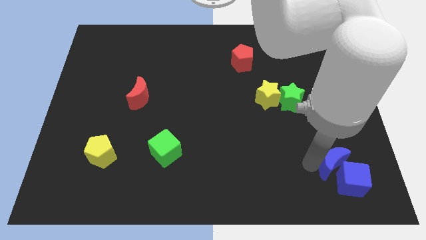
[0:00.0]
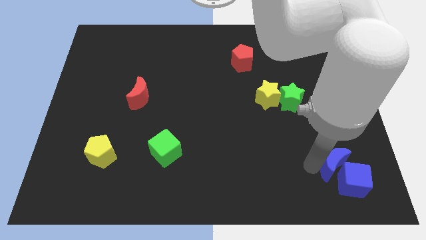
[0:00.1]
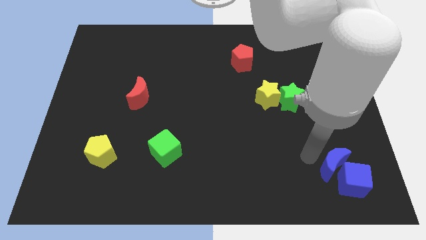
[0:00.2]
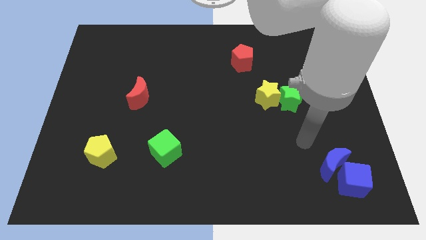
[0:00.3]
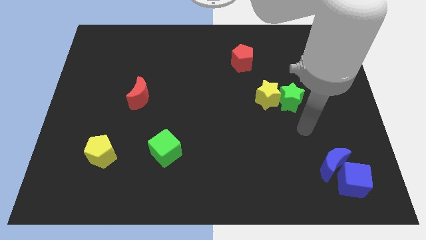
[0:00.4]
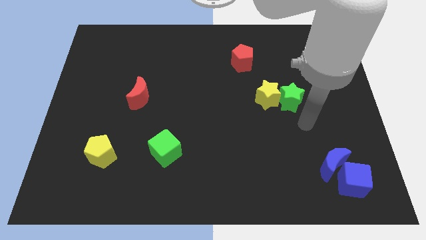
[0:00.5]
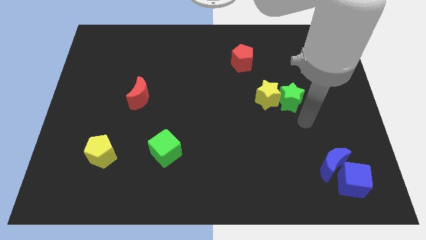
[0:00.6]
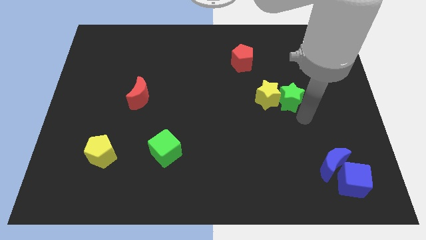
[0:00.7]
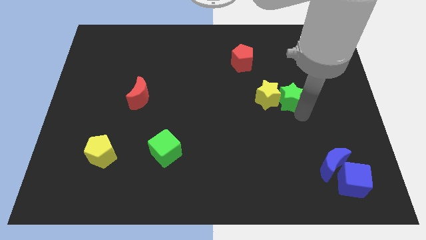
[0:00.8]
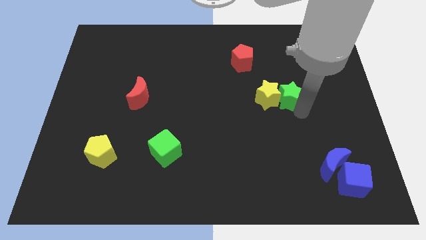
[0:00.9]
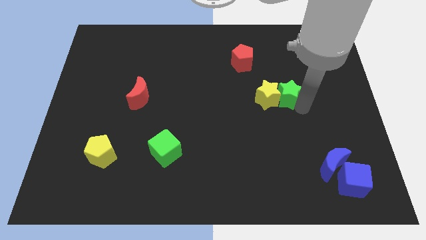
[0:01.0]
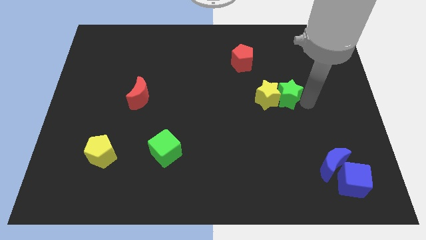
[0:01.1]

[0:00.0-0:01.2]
touch at the bottom right side of the green star

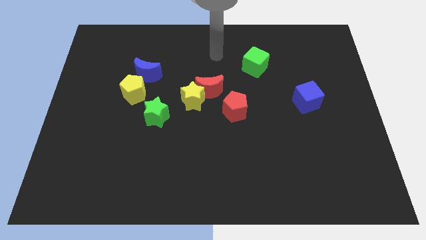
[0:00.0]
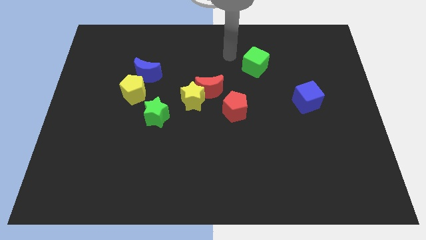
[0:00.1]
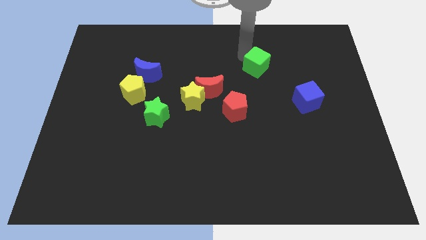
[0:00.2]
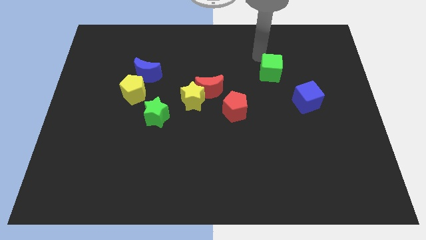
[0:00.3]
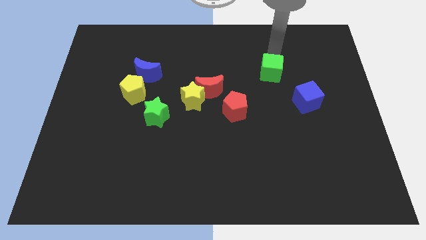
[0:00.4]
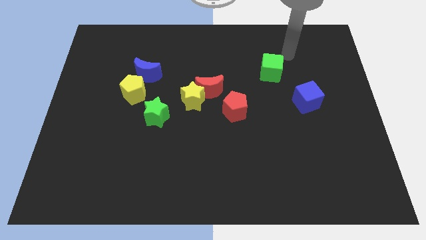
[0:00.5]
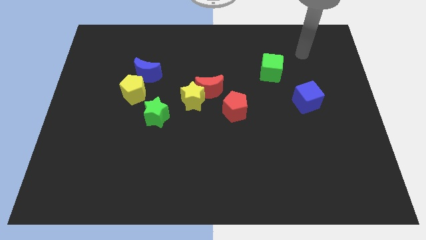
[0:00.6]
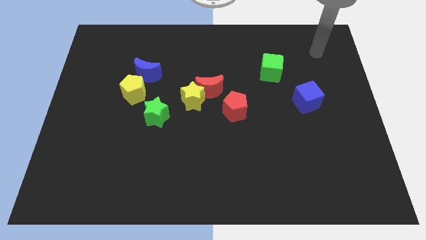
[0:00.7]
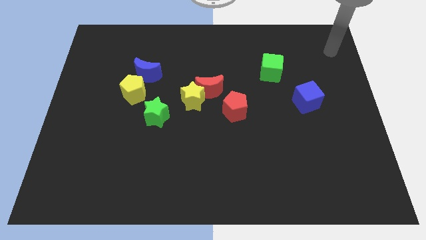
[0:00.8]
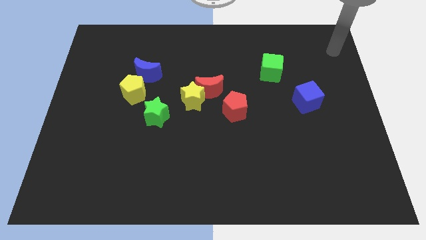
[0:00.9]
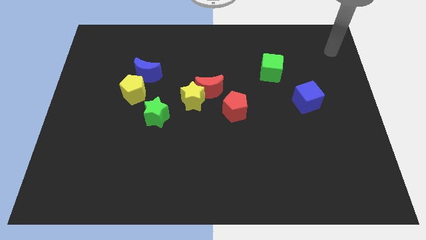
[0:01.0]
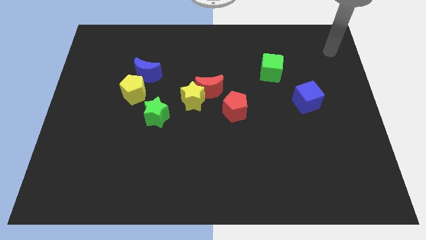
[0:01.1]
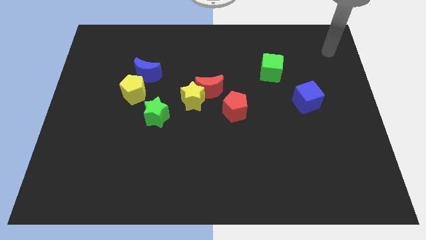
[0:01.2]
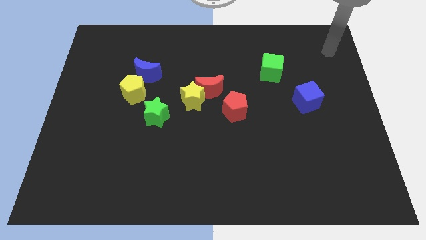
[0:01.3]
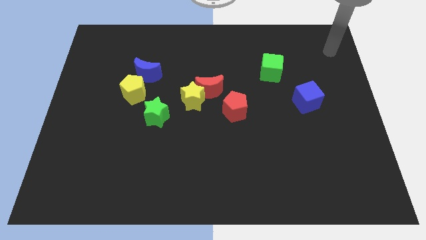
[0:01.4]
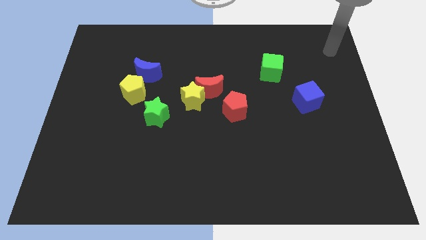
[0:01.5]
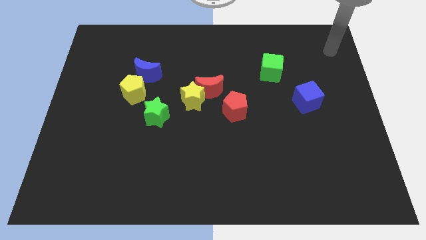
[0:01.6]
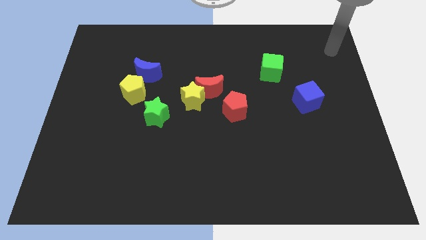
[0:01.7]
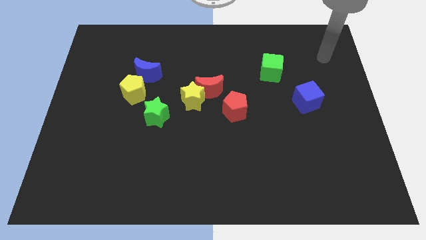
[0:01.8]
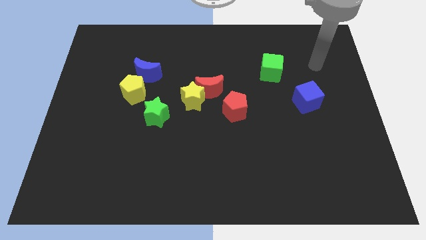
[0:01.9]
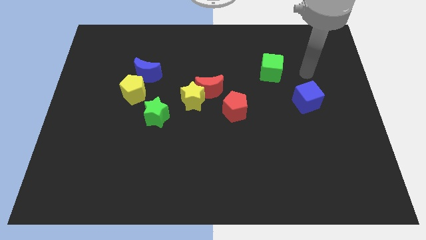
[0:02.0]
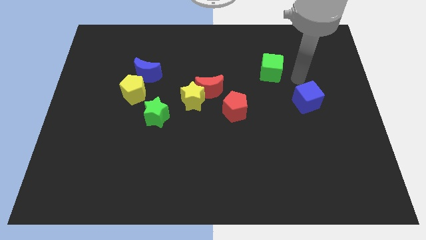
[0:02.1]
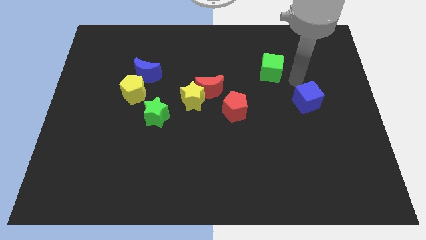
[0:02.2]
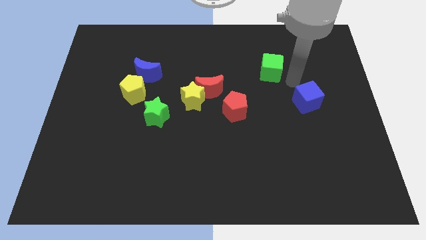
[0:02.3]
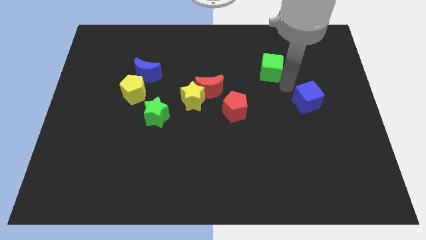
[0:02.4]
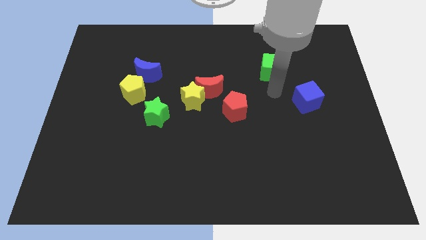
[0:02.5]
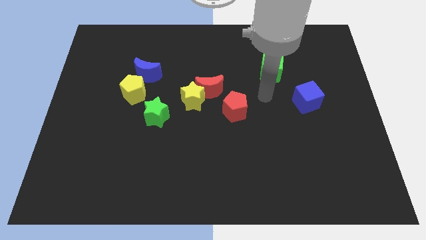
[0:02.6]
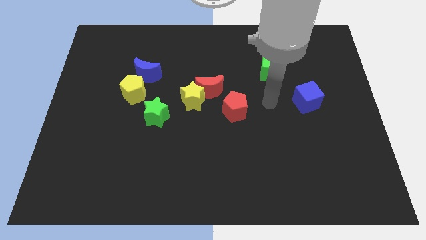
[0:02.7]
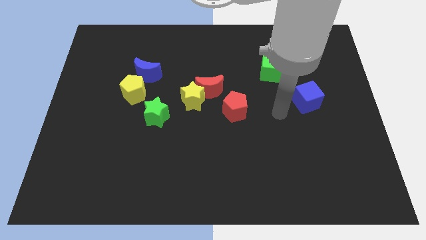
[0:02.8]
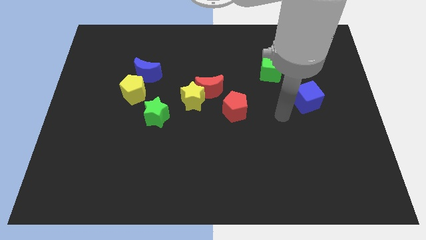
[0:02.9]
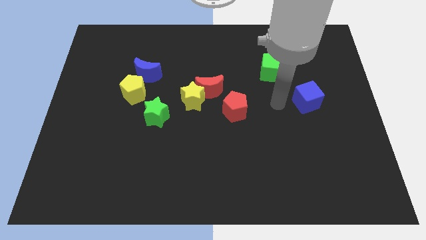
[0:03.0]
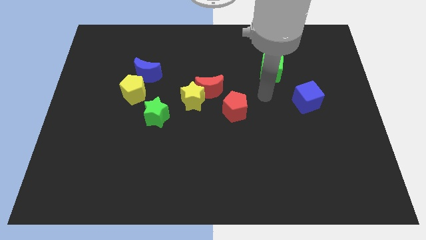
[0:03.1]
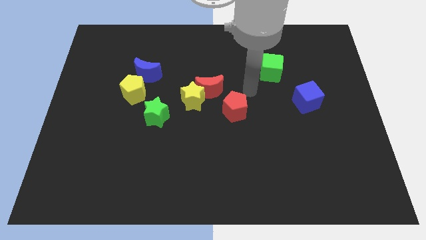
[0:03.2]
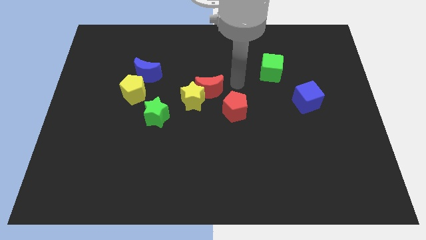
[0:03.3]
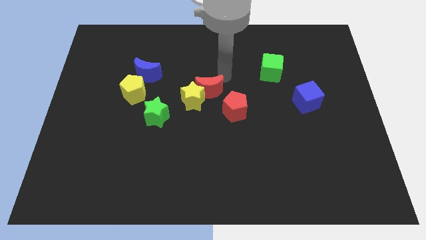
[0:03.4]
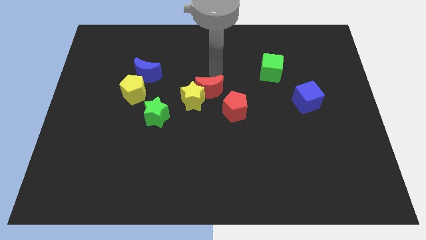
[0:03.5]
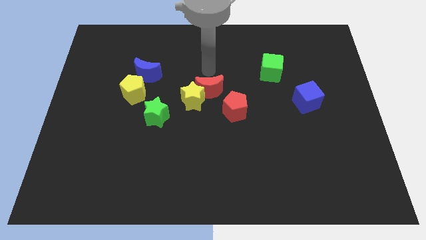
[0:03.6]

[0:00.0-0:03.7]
place your hand above the red crescent

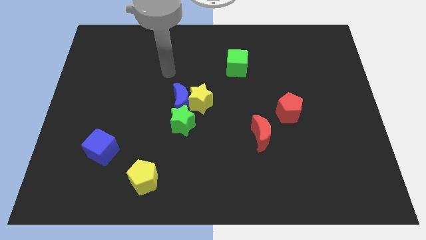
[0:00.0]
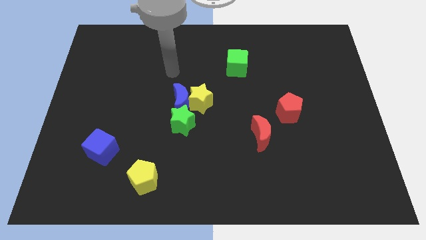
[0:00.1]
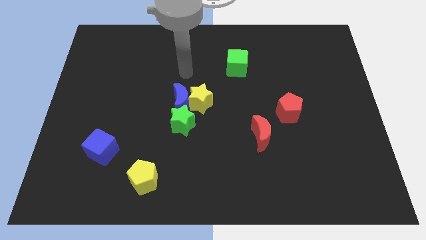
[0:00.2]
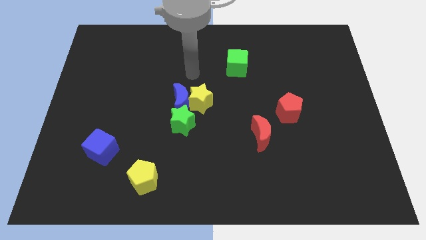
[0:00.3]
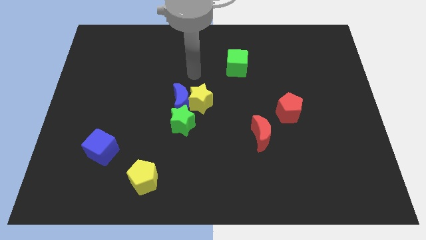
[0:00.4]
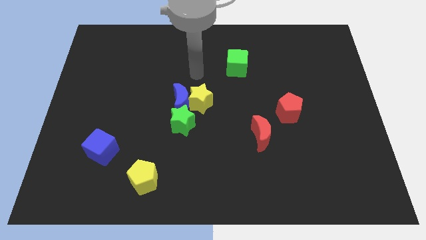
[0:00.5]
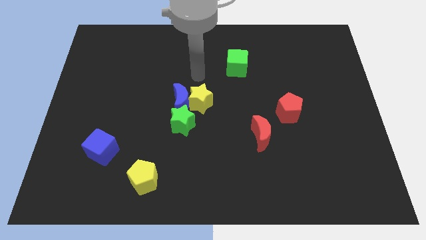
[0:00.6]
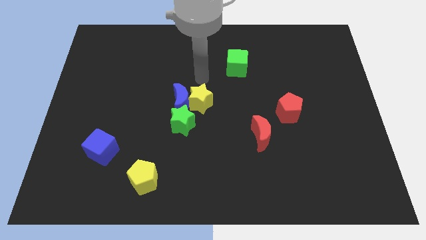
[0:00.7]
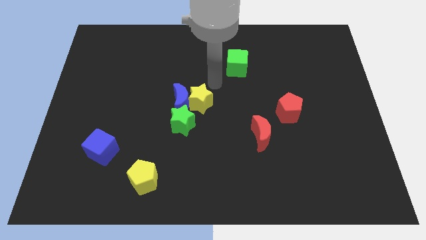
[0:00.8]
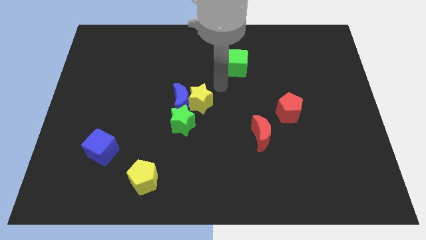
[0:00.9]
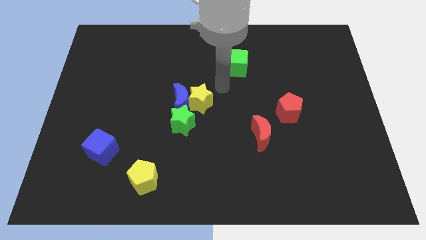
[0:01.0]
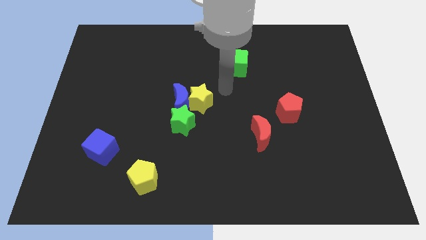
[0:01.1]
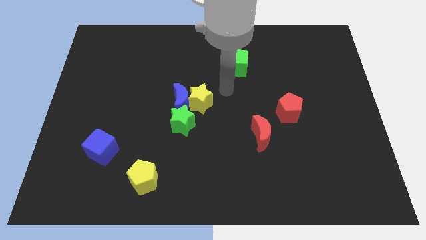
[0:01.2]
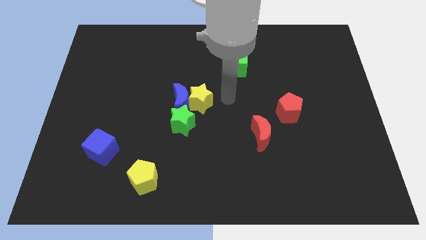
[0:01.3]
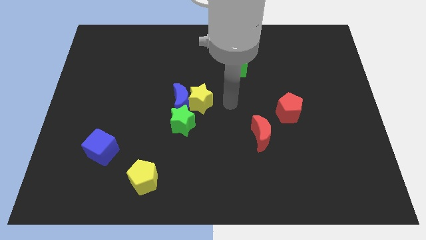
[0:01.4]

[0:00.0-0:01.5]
point your arm to the right side of the yellow star

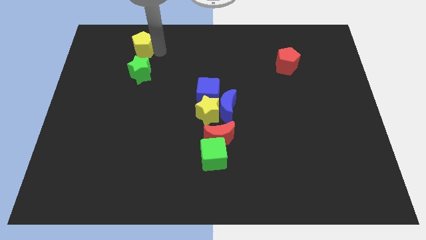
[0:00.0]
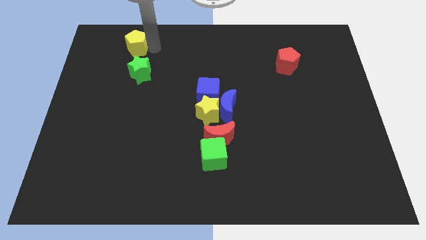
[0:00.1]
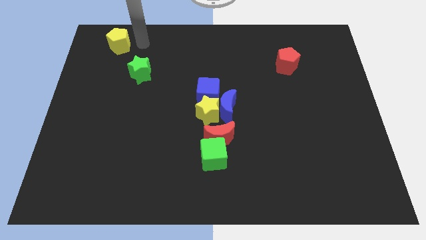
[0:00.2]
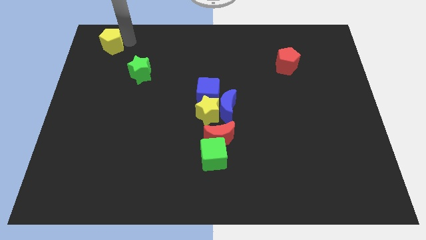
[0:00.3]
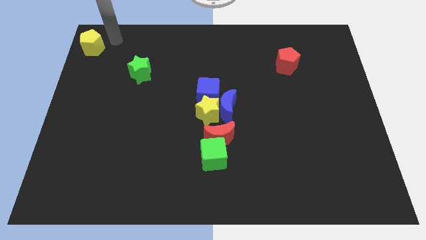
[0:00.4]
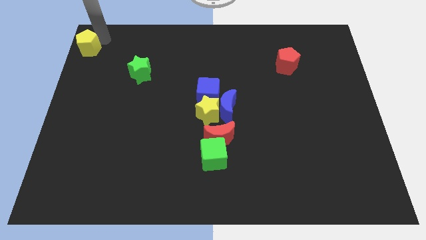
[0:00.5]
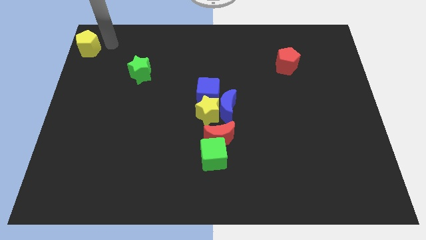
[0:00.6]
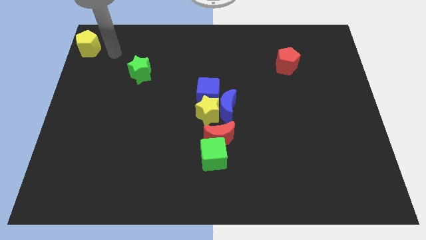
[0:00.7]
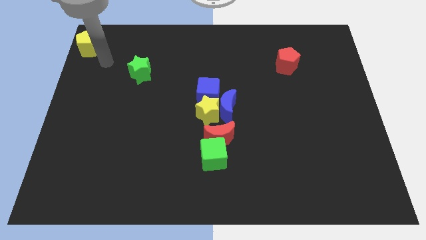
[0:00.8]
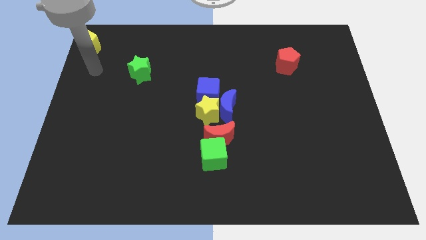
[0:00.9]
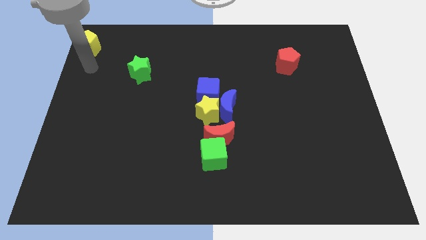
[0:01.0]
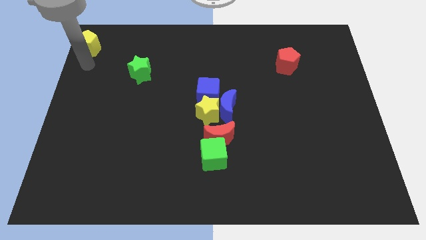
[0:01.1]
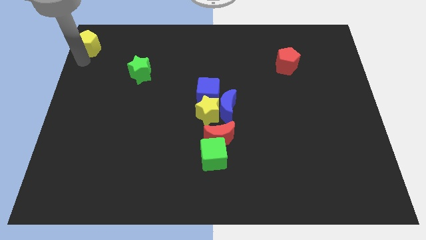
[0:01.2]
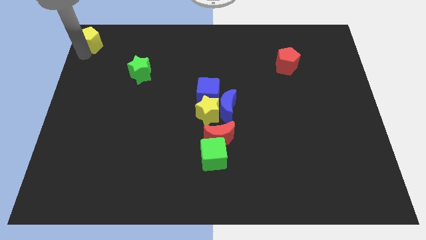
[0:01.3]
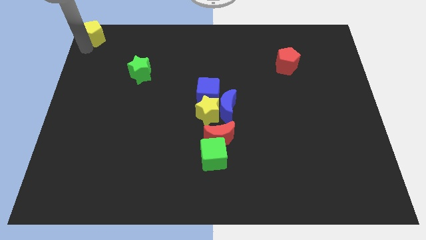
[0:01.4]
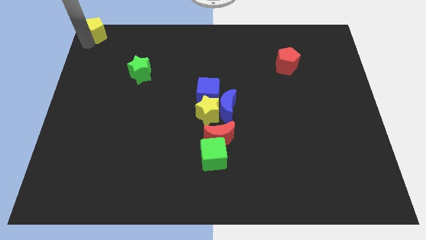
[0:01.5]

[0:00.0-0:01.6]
move the yellow pentagon to the top left corner of the board

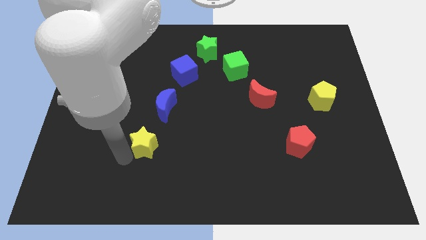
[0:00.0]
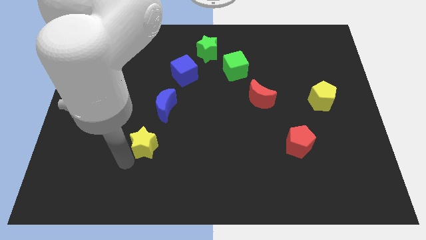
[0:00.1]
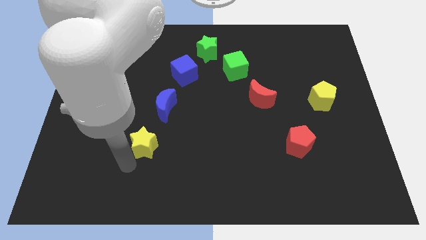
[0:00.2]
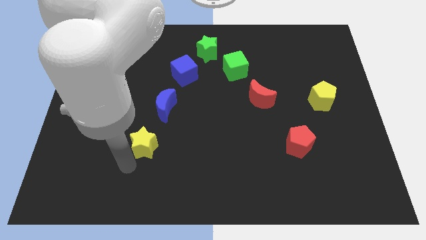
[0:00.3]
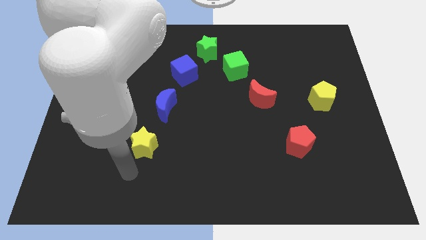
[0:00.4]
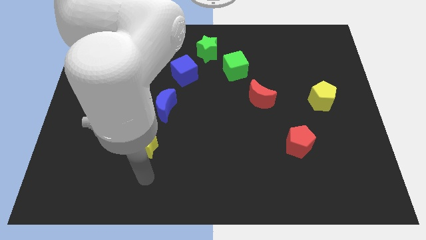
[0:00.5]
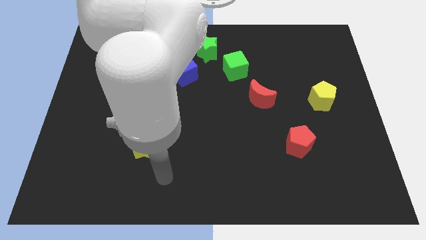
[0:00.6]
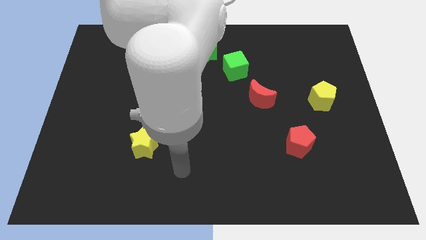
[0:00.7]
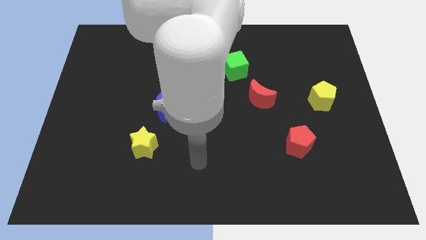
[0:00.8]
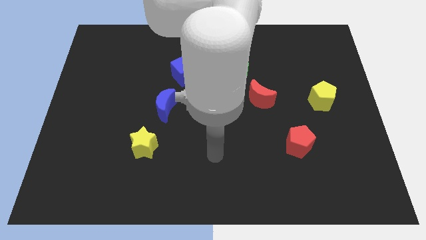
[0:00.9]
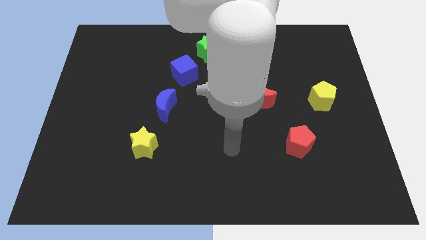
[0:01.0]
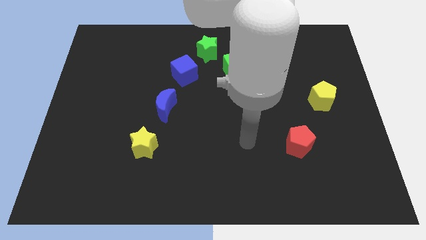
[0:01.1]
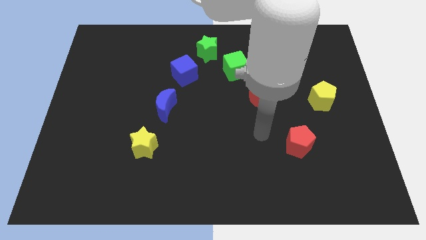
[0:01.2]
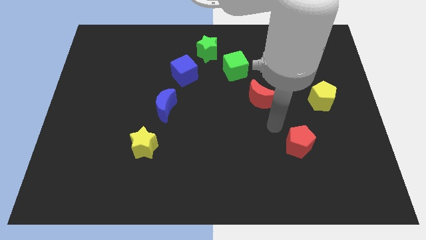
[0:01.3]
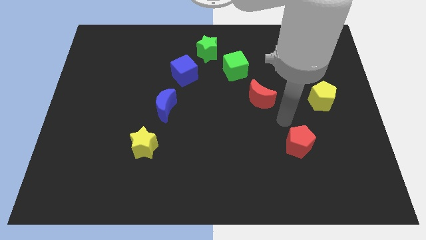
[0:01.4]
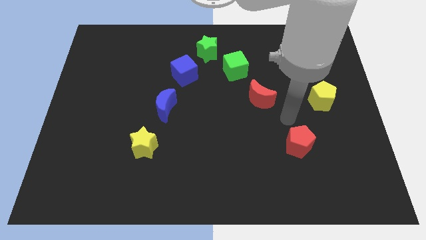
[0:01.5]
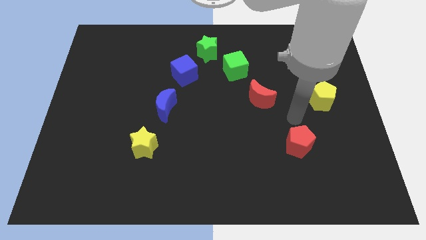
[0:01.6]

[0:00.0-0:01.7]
push your hand away from the yellow star
